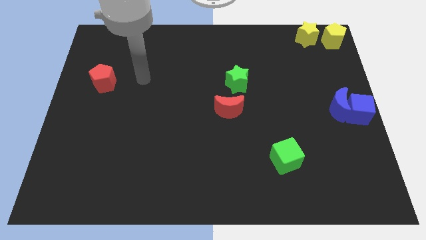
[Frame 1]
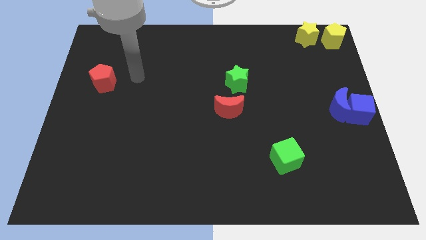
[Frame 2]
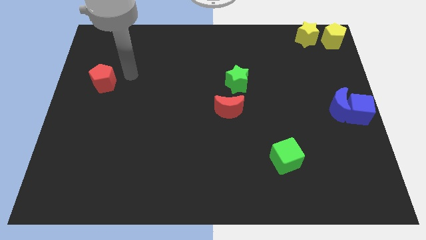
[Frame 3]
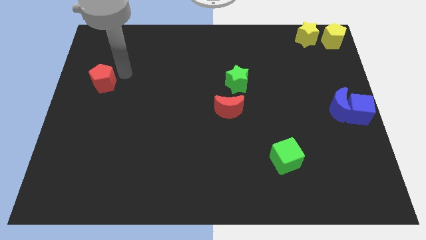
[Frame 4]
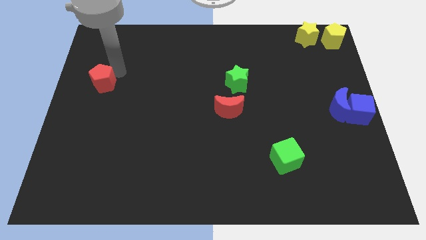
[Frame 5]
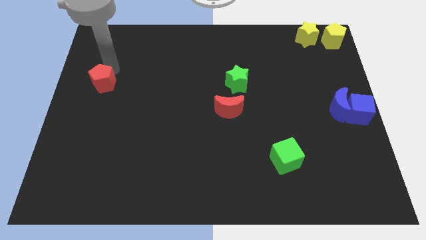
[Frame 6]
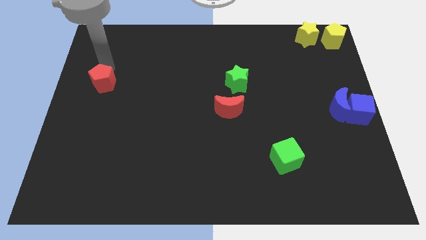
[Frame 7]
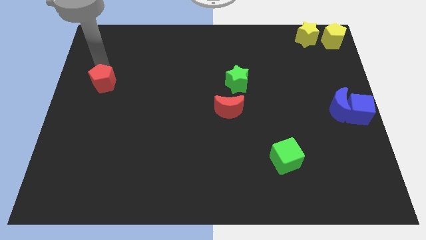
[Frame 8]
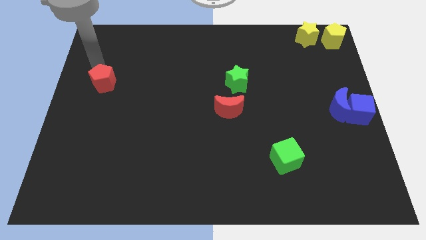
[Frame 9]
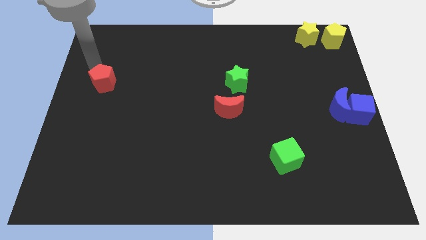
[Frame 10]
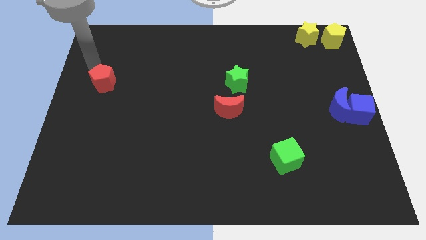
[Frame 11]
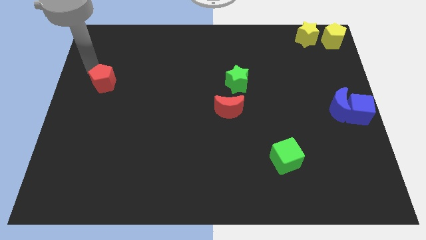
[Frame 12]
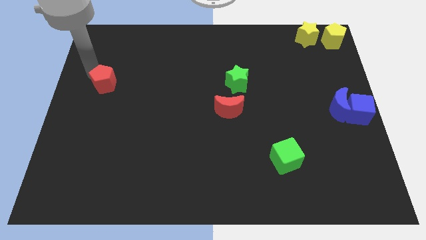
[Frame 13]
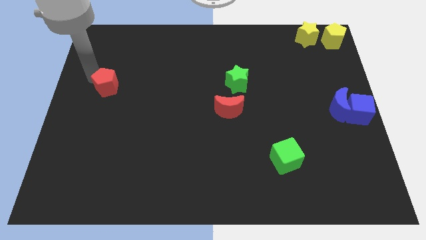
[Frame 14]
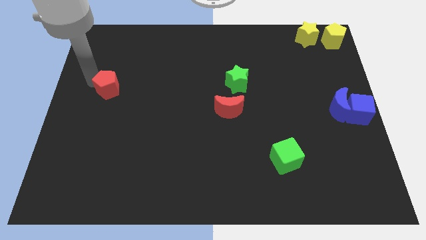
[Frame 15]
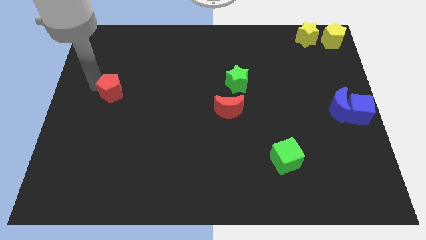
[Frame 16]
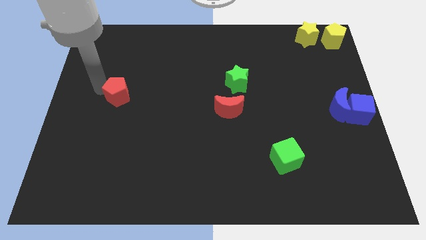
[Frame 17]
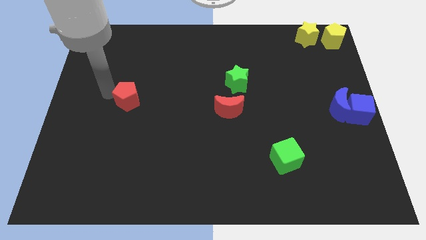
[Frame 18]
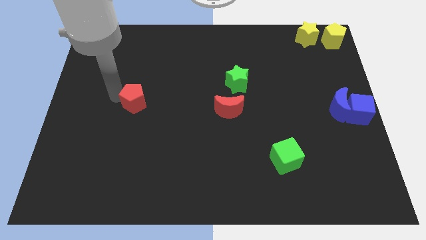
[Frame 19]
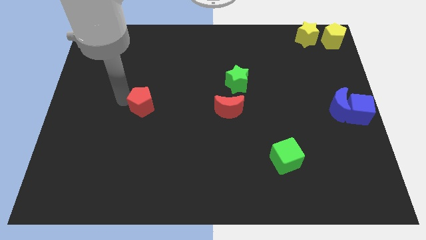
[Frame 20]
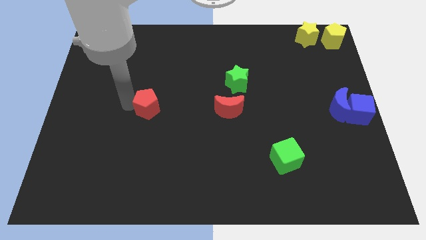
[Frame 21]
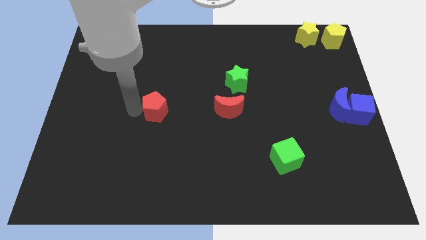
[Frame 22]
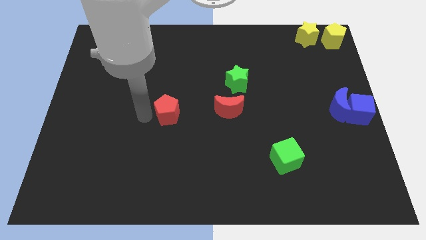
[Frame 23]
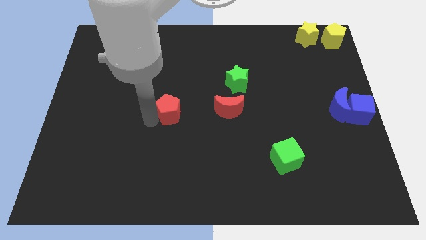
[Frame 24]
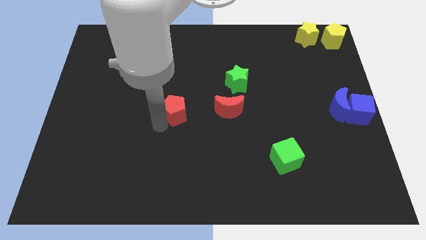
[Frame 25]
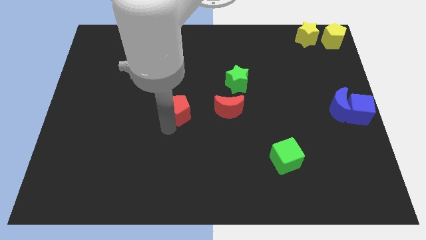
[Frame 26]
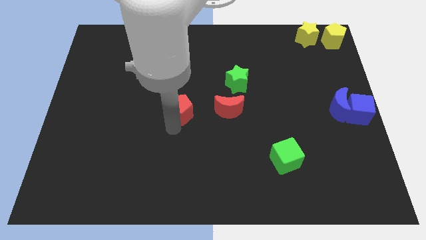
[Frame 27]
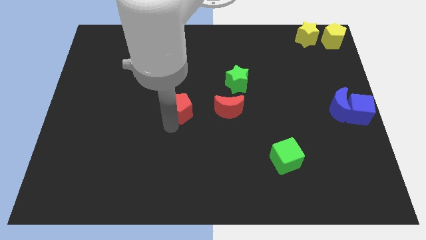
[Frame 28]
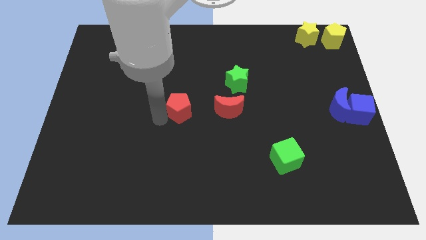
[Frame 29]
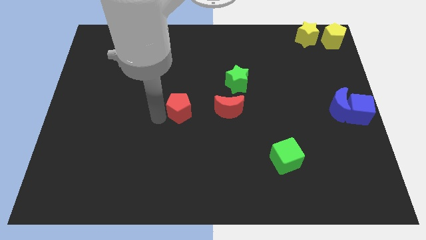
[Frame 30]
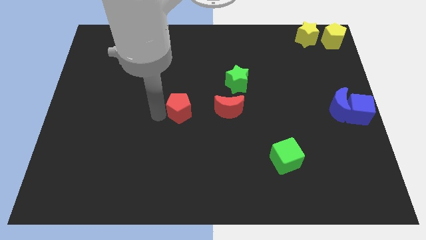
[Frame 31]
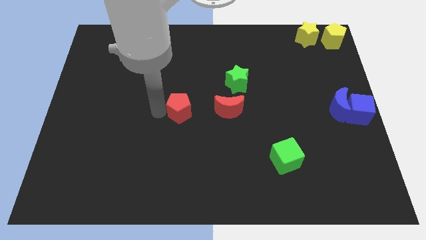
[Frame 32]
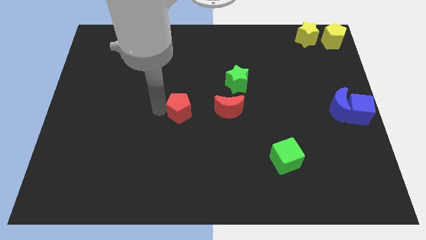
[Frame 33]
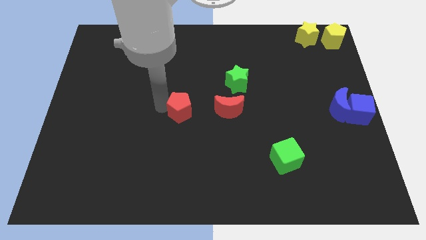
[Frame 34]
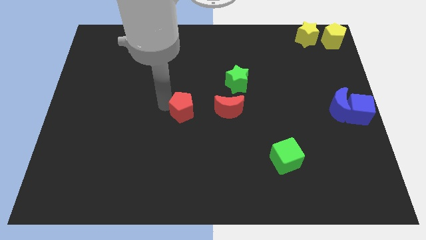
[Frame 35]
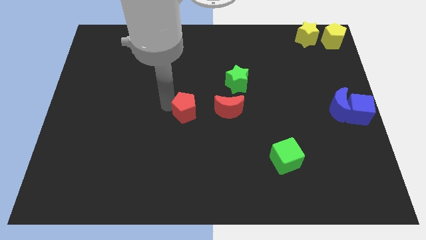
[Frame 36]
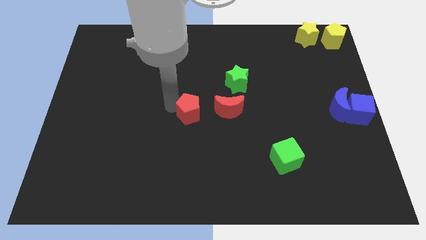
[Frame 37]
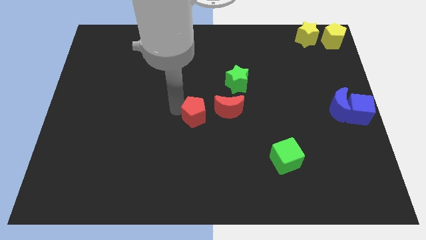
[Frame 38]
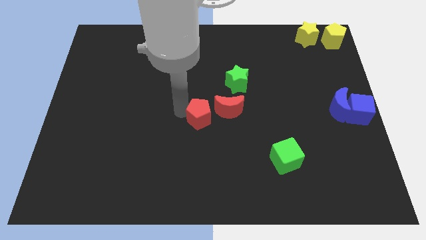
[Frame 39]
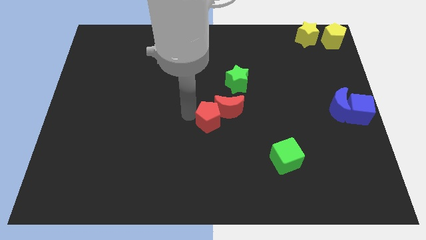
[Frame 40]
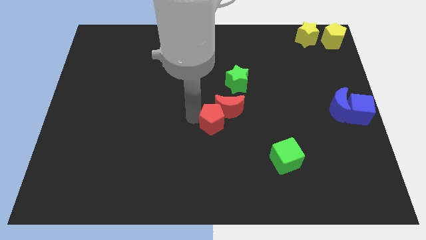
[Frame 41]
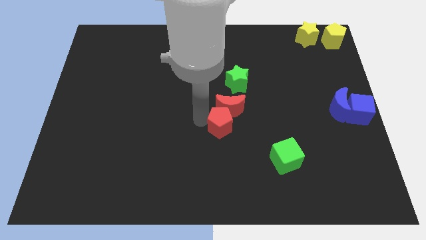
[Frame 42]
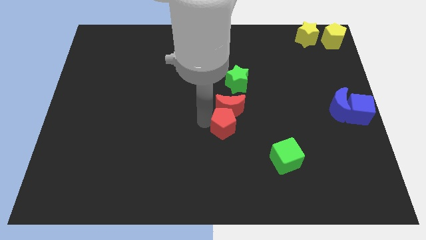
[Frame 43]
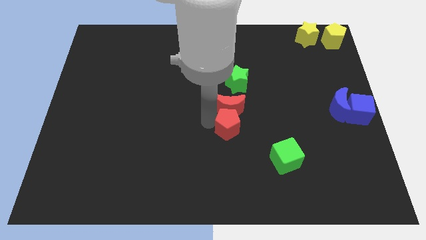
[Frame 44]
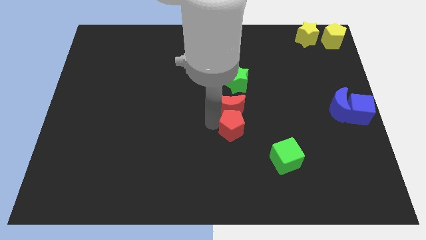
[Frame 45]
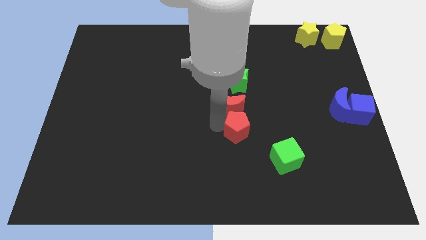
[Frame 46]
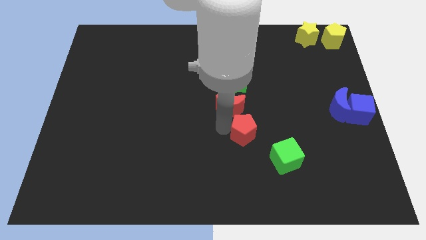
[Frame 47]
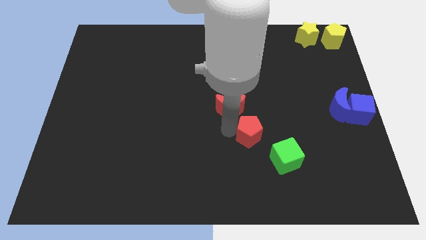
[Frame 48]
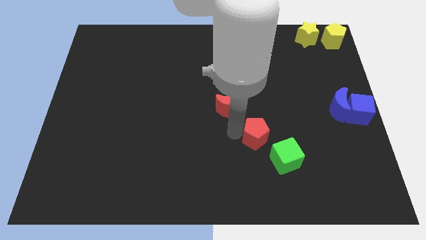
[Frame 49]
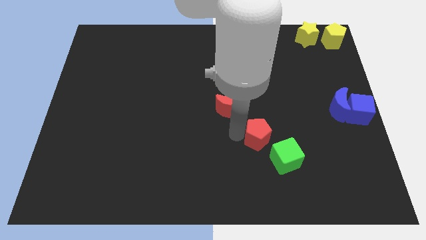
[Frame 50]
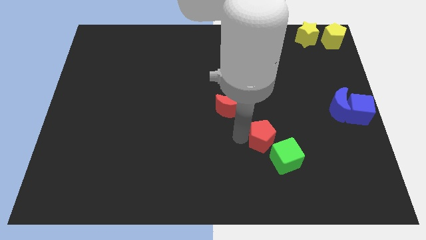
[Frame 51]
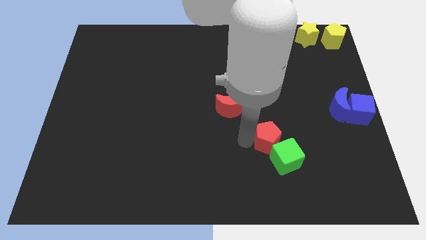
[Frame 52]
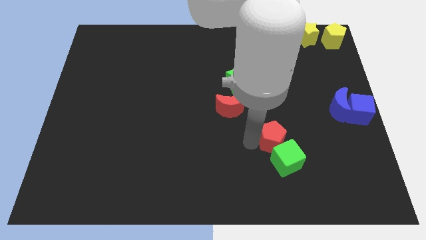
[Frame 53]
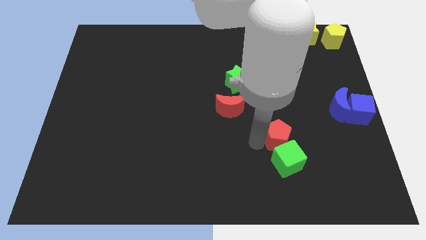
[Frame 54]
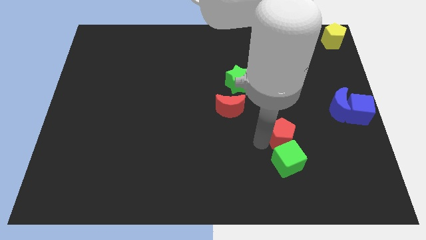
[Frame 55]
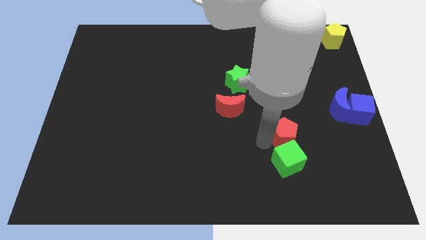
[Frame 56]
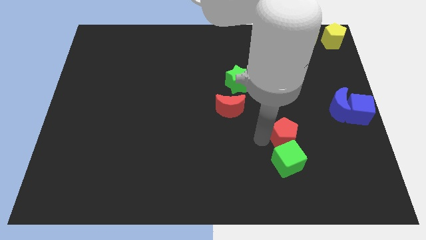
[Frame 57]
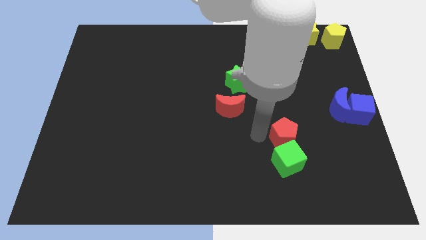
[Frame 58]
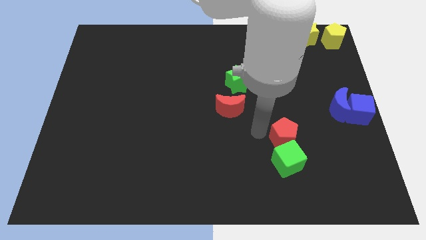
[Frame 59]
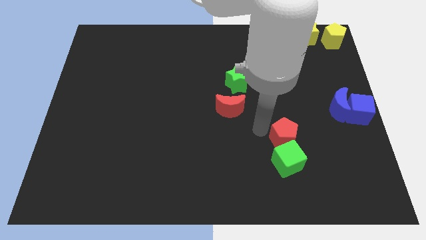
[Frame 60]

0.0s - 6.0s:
move red pentagon into green cube

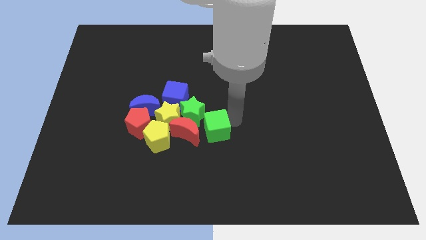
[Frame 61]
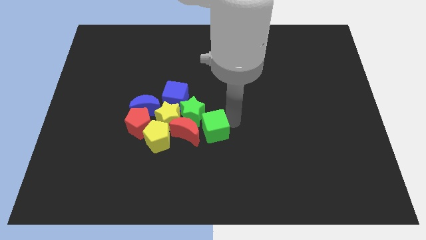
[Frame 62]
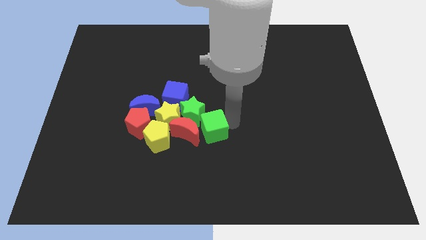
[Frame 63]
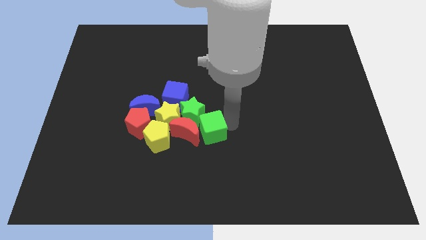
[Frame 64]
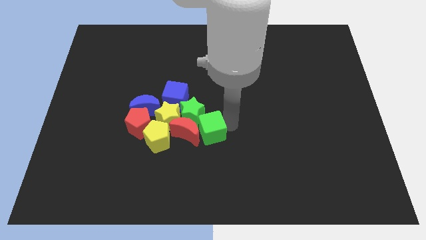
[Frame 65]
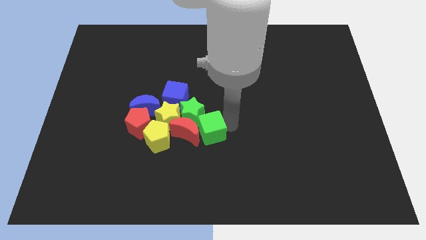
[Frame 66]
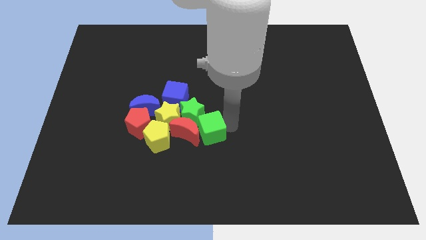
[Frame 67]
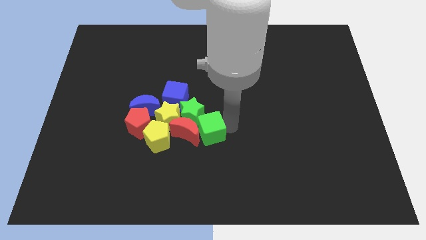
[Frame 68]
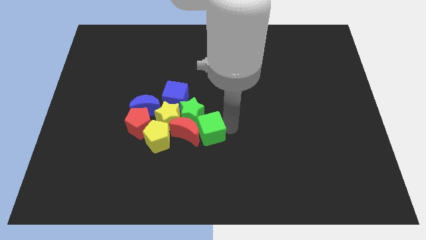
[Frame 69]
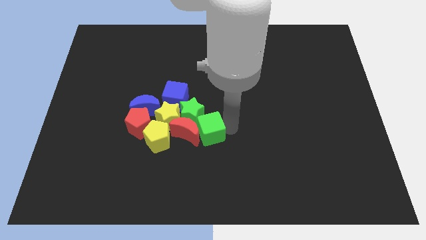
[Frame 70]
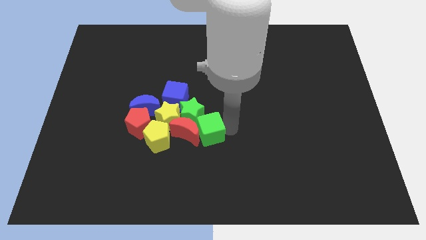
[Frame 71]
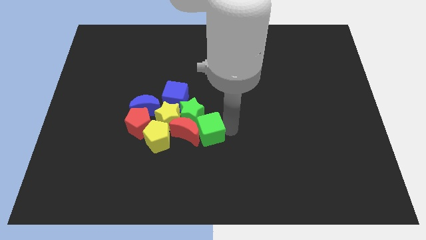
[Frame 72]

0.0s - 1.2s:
place the green cube towards the top right side of the red crescent

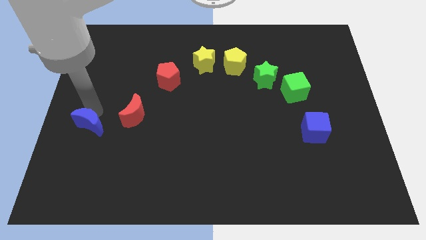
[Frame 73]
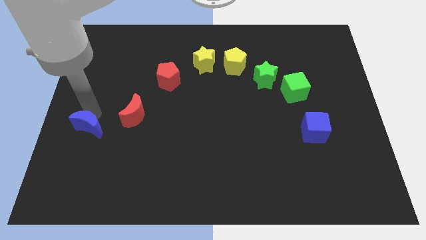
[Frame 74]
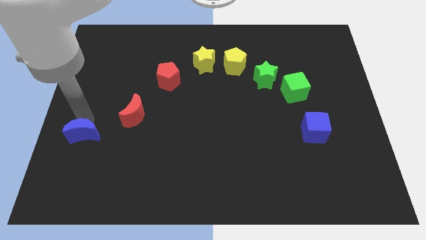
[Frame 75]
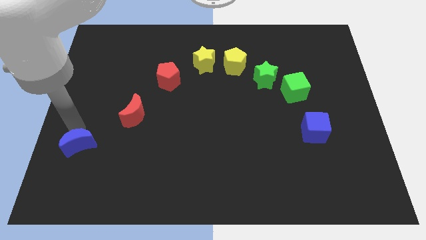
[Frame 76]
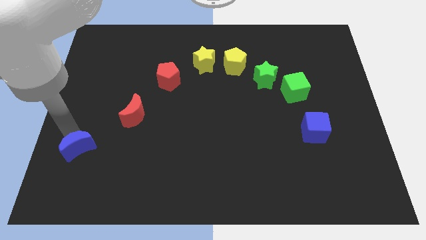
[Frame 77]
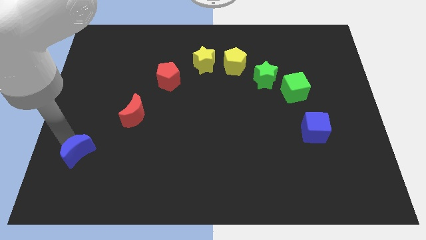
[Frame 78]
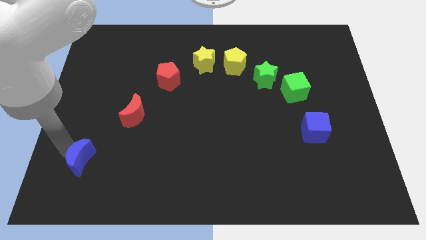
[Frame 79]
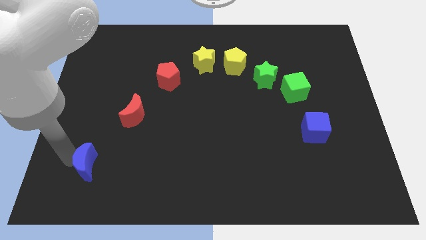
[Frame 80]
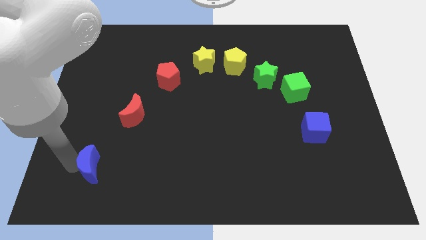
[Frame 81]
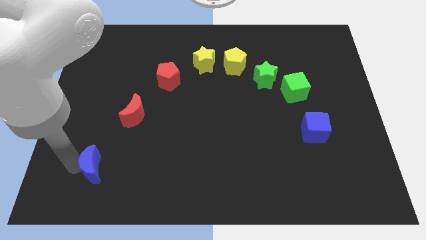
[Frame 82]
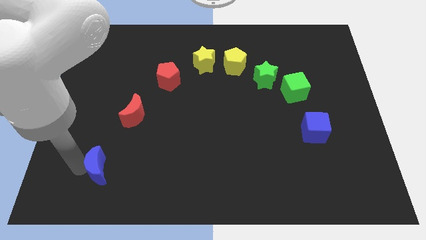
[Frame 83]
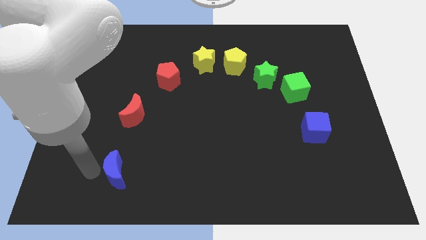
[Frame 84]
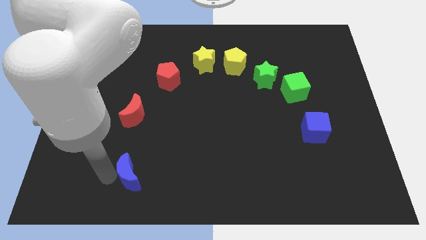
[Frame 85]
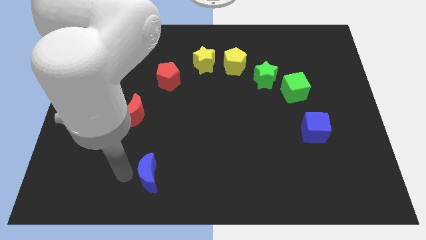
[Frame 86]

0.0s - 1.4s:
move the blue crescent towards the right

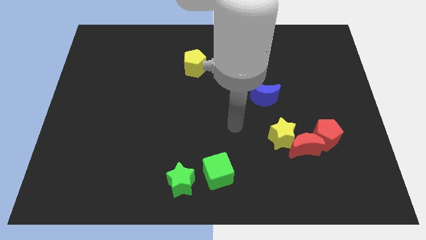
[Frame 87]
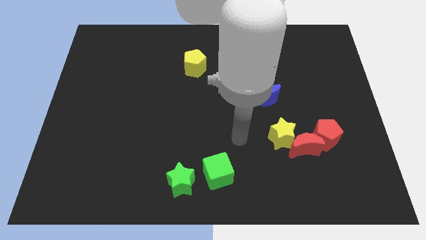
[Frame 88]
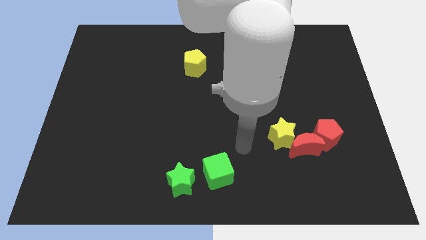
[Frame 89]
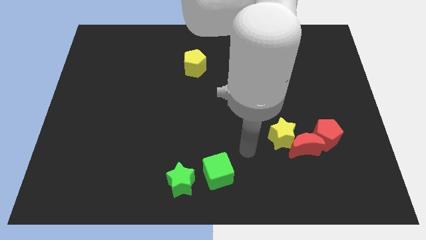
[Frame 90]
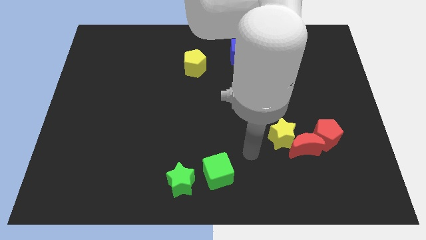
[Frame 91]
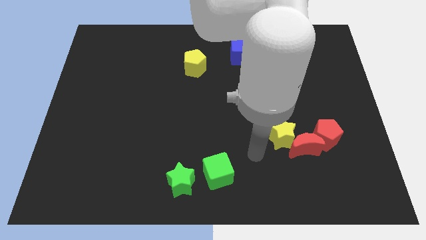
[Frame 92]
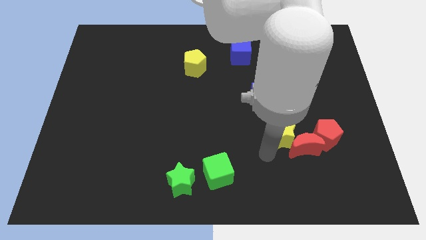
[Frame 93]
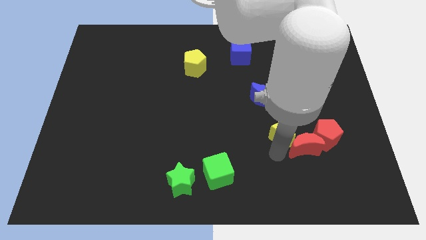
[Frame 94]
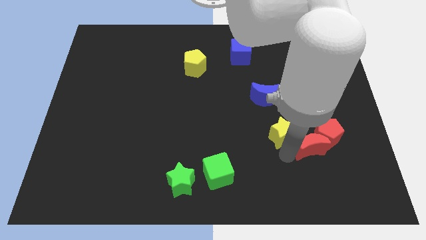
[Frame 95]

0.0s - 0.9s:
place the arm below the yellow star
